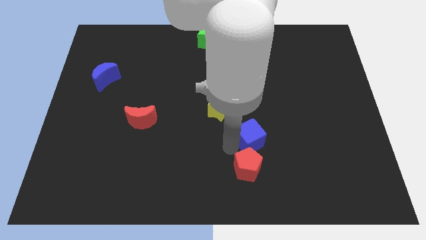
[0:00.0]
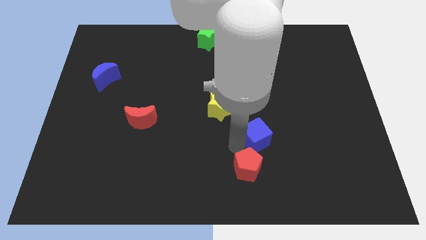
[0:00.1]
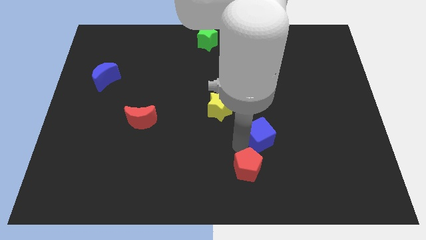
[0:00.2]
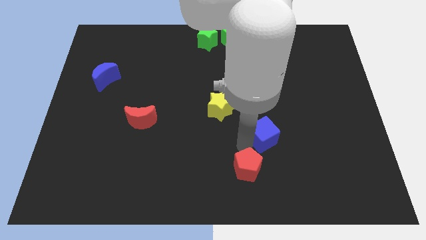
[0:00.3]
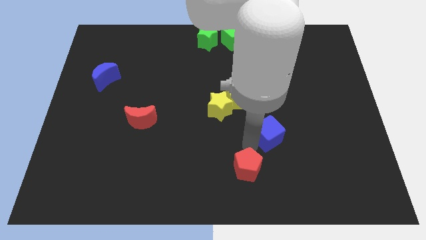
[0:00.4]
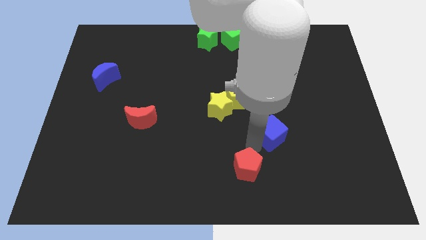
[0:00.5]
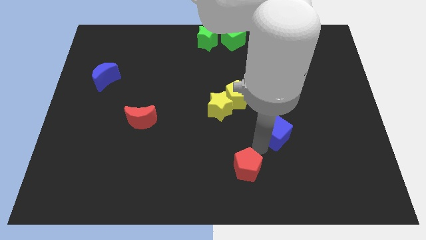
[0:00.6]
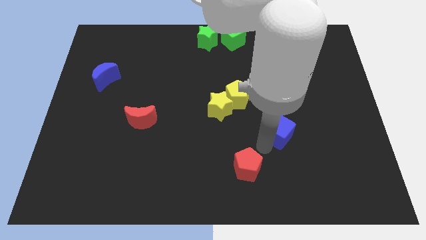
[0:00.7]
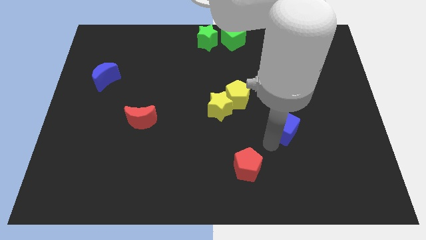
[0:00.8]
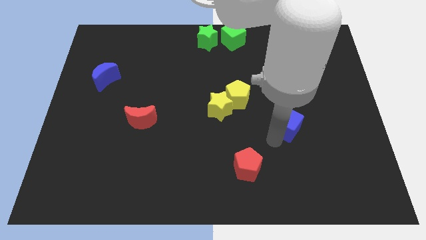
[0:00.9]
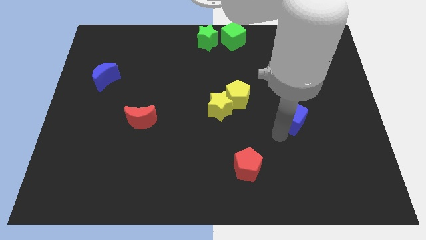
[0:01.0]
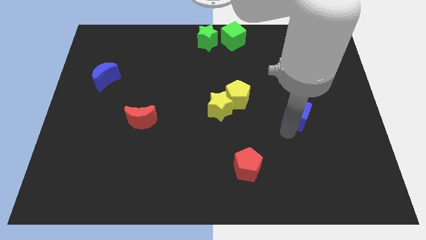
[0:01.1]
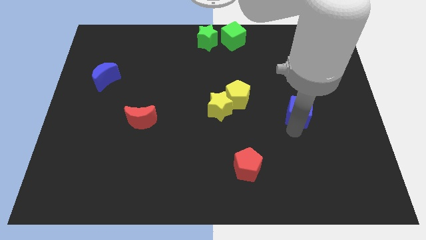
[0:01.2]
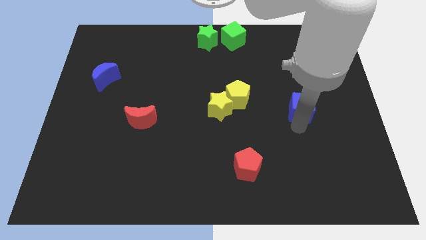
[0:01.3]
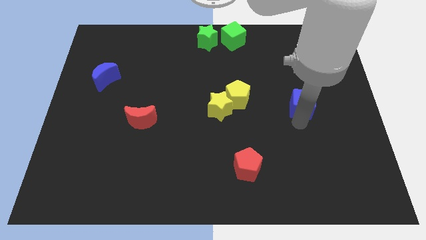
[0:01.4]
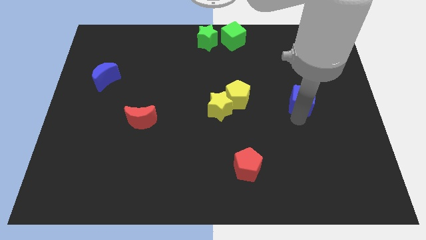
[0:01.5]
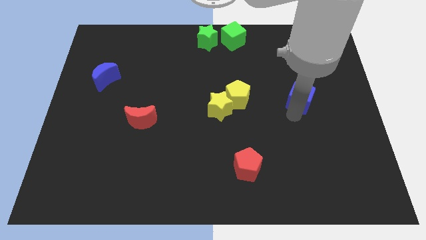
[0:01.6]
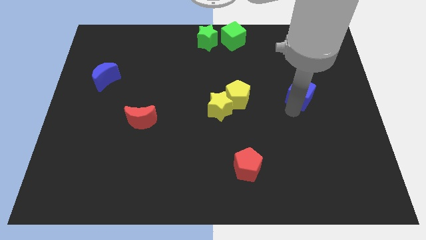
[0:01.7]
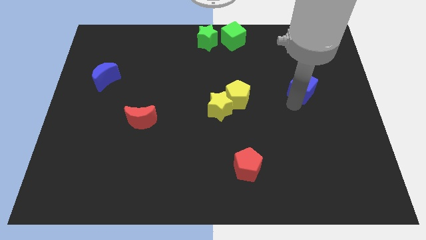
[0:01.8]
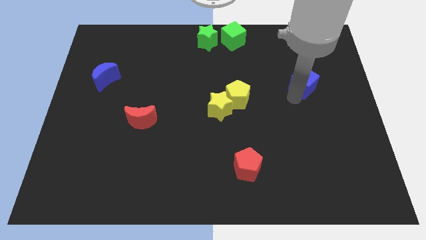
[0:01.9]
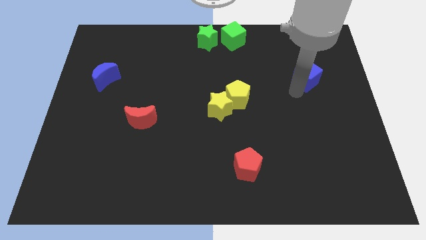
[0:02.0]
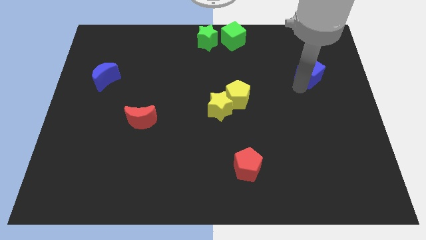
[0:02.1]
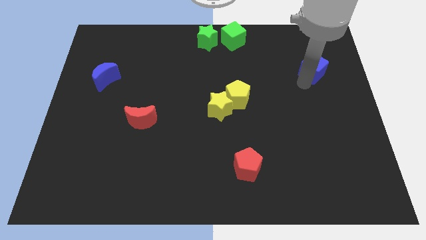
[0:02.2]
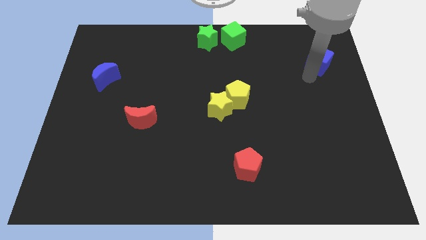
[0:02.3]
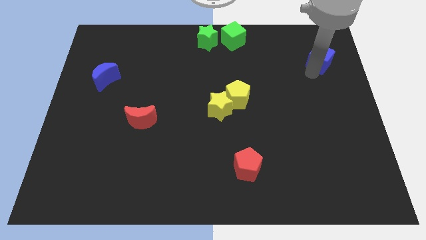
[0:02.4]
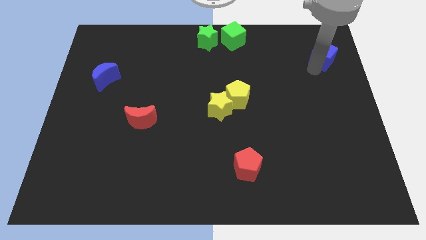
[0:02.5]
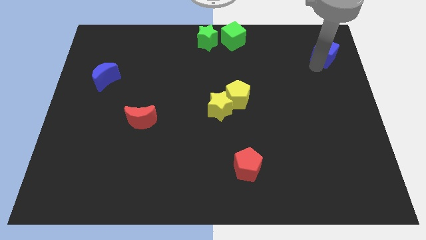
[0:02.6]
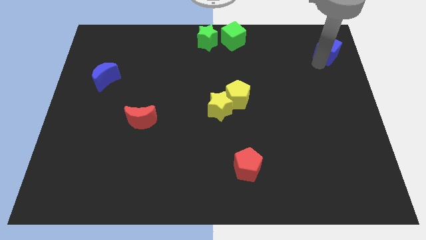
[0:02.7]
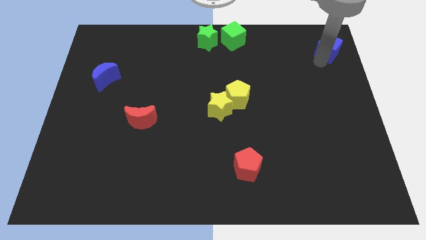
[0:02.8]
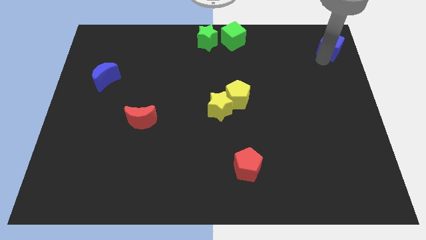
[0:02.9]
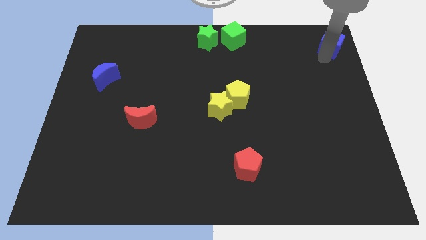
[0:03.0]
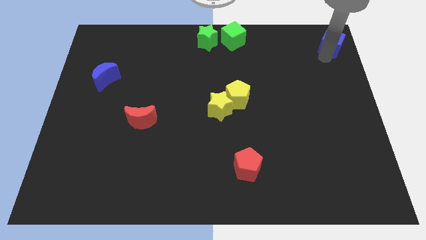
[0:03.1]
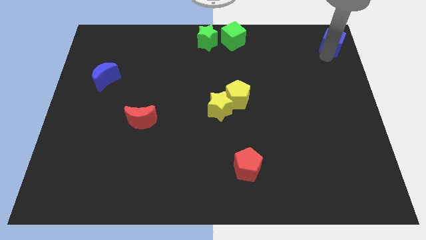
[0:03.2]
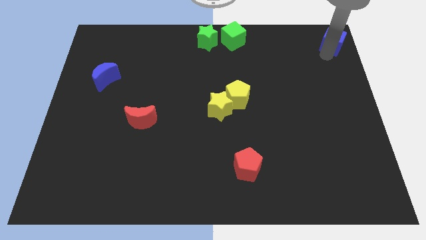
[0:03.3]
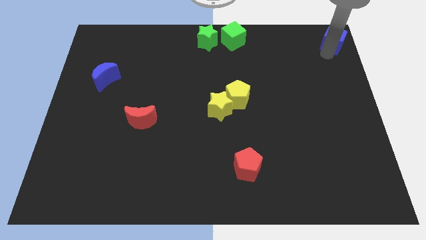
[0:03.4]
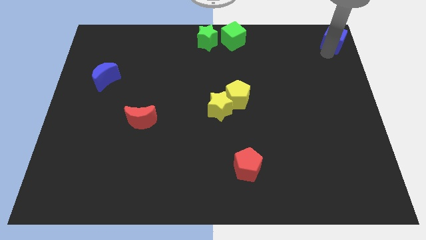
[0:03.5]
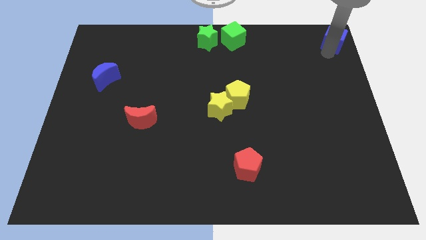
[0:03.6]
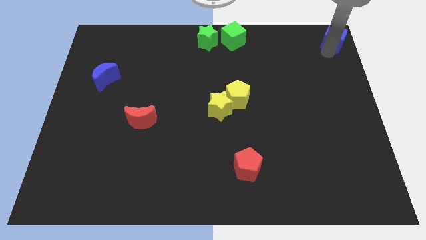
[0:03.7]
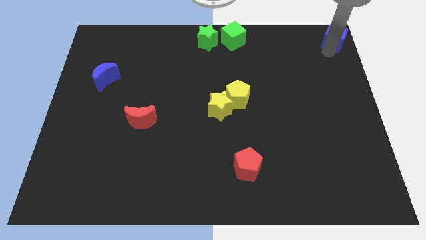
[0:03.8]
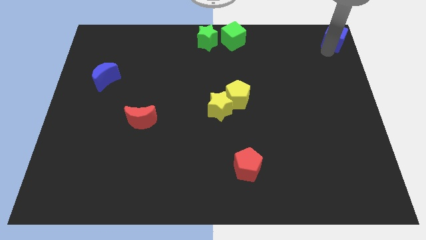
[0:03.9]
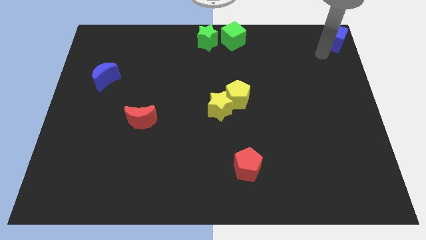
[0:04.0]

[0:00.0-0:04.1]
arrange the blue cube at the top right corner of the board

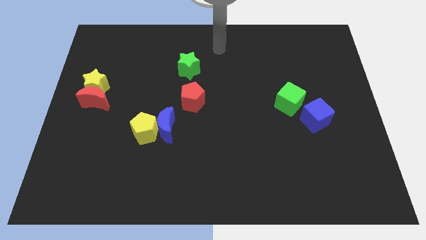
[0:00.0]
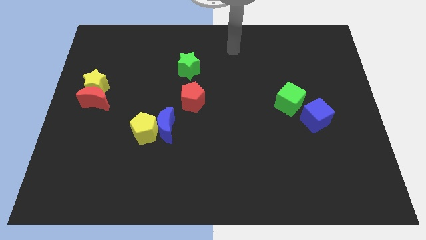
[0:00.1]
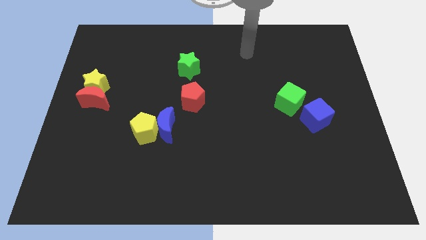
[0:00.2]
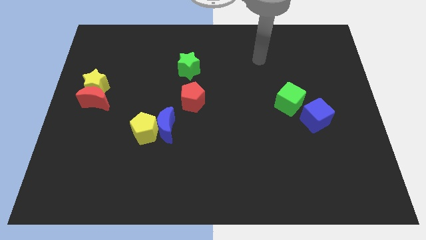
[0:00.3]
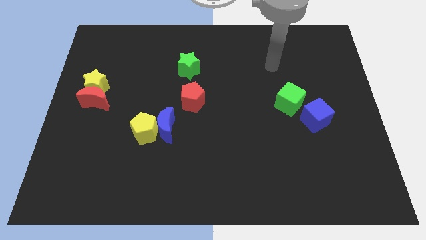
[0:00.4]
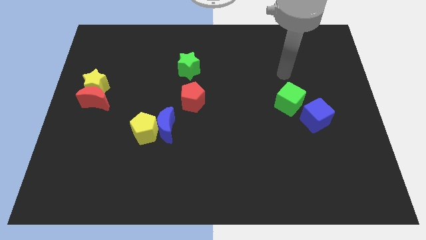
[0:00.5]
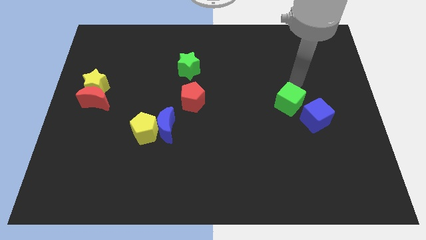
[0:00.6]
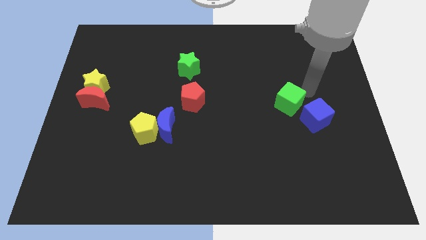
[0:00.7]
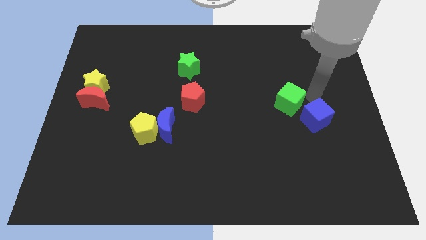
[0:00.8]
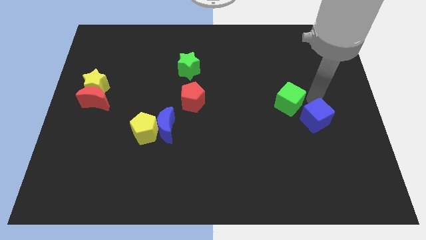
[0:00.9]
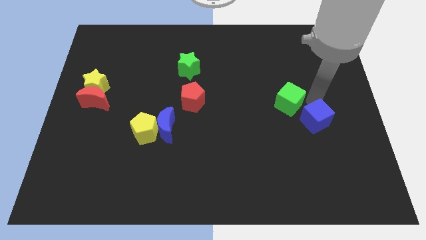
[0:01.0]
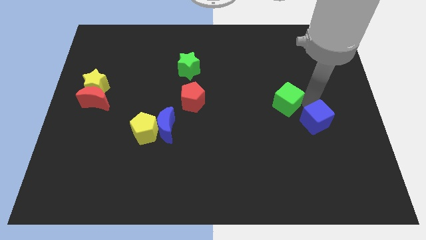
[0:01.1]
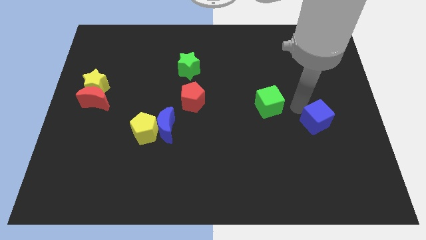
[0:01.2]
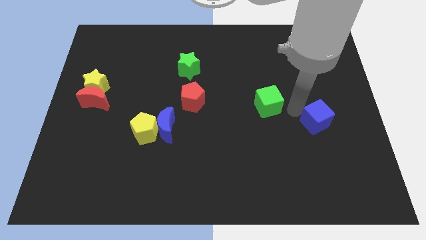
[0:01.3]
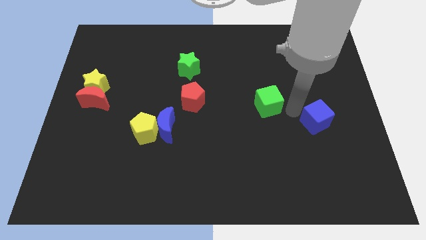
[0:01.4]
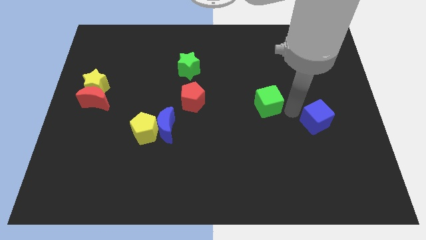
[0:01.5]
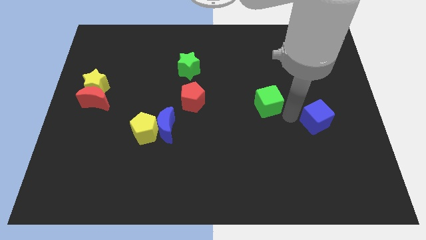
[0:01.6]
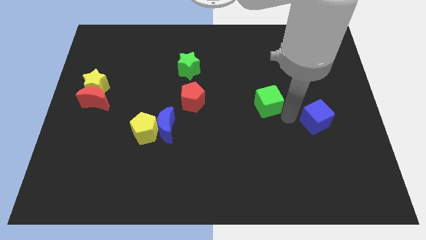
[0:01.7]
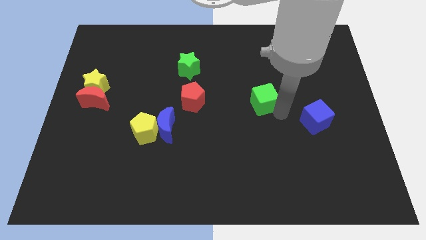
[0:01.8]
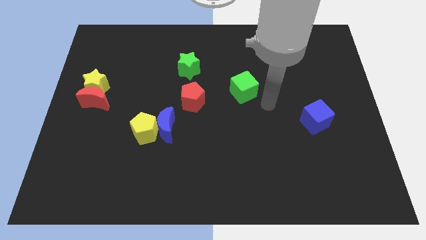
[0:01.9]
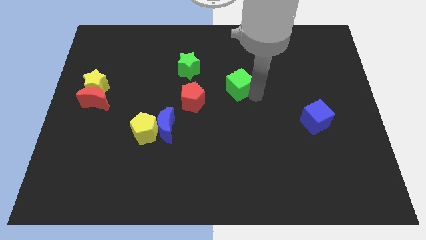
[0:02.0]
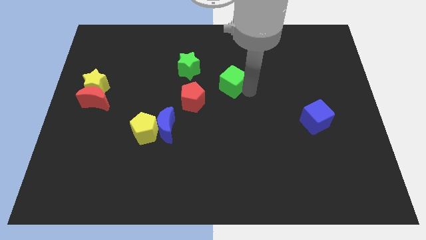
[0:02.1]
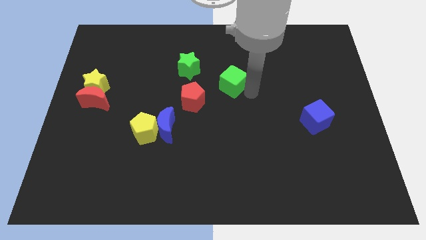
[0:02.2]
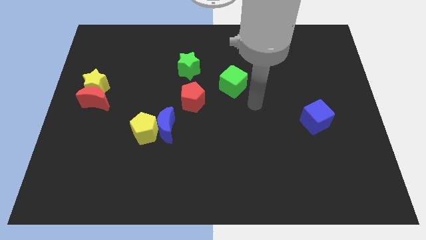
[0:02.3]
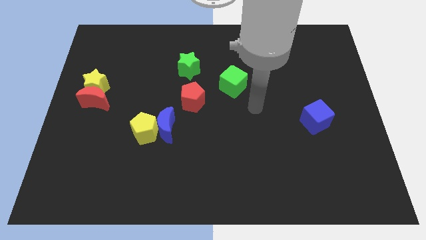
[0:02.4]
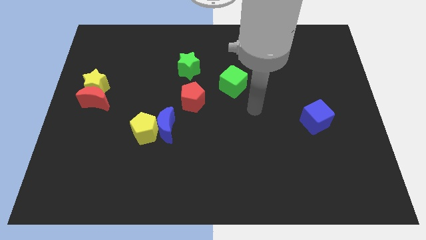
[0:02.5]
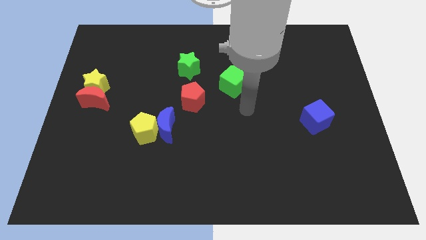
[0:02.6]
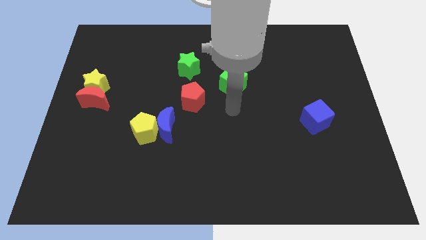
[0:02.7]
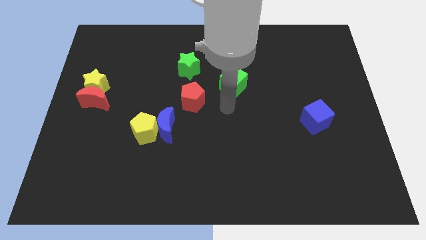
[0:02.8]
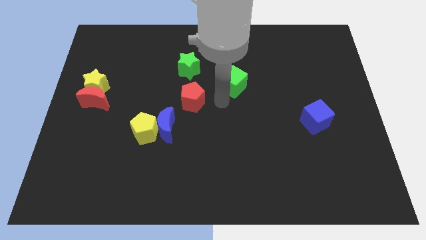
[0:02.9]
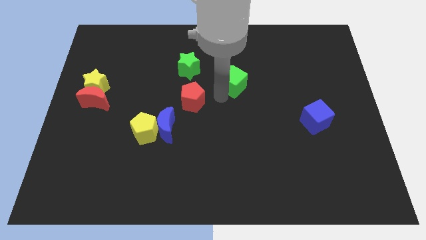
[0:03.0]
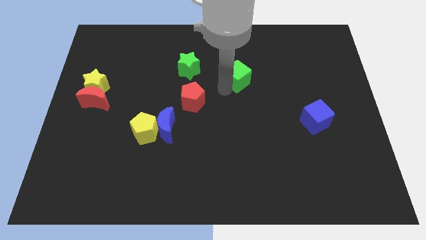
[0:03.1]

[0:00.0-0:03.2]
move the green cube to the top right of the red pentagon

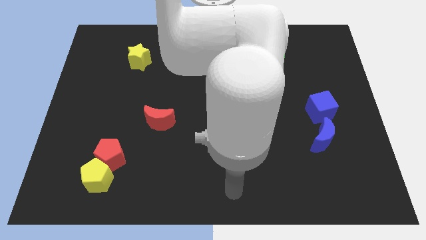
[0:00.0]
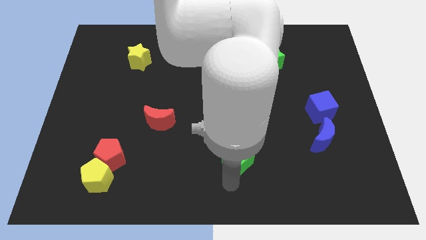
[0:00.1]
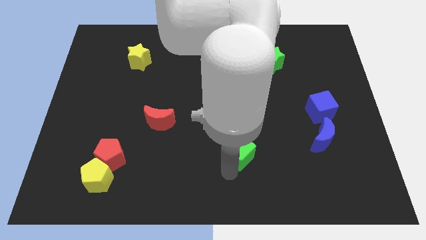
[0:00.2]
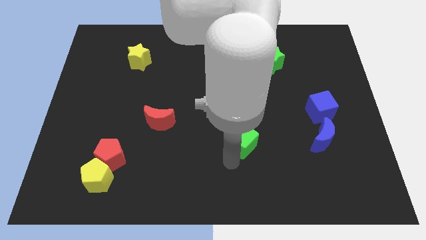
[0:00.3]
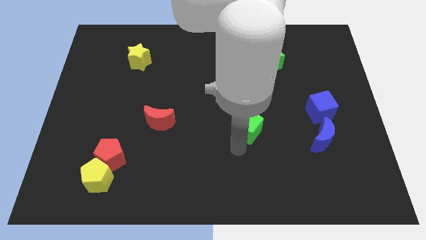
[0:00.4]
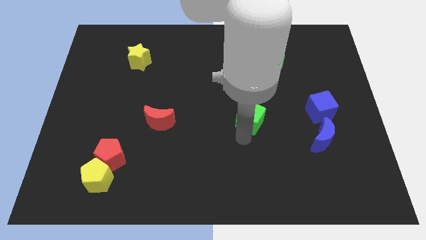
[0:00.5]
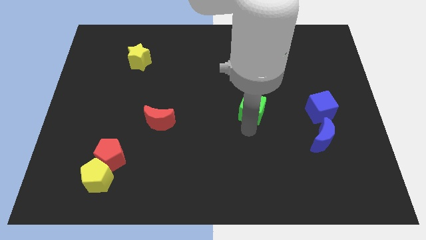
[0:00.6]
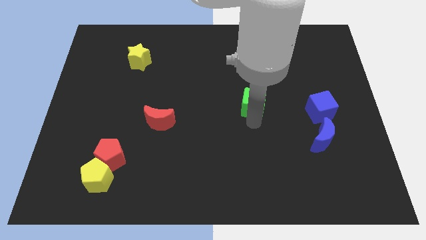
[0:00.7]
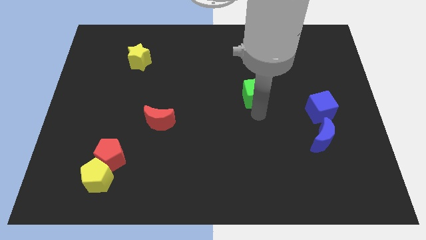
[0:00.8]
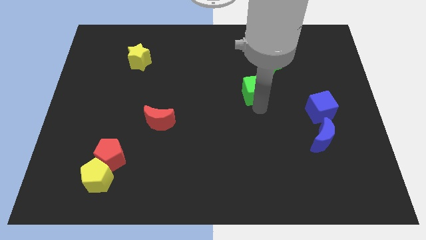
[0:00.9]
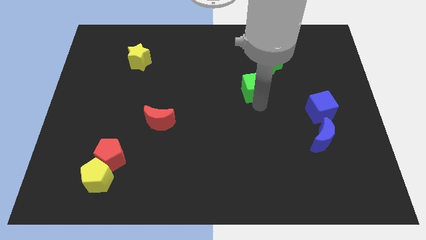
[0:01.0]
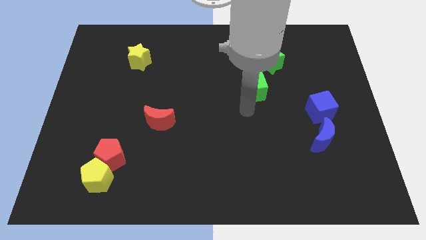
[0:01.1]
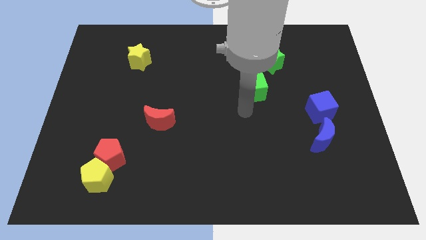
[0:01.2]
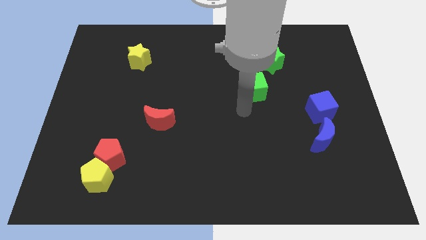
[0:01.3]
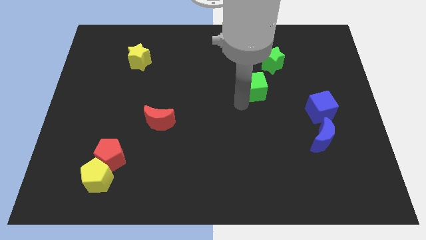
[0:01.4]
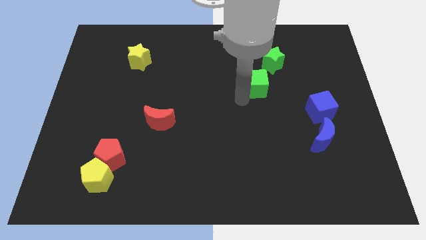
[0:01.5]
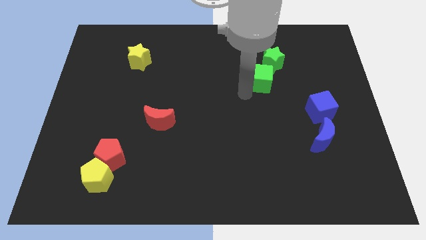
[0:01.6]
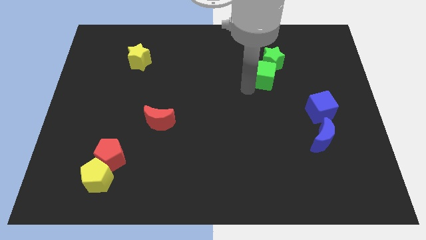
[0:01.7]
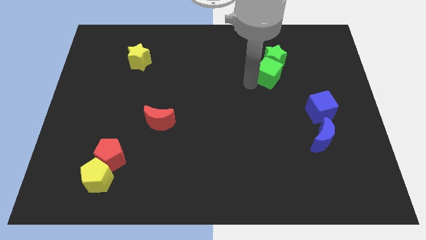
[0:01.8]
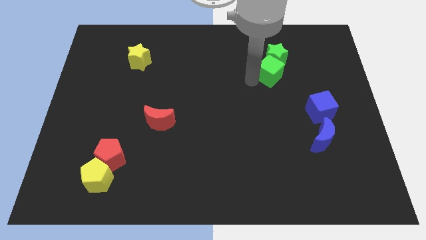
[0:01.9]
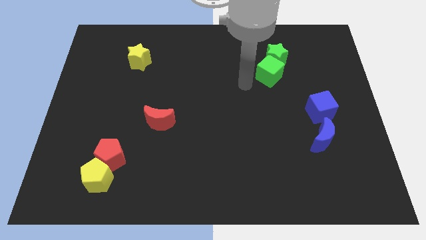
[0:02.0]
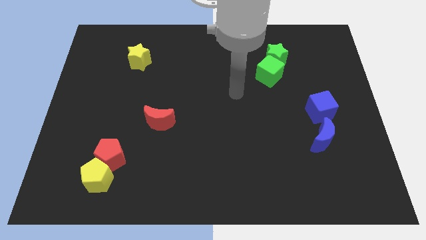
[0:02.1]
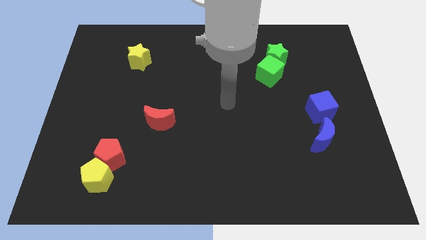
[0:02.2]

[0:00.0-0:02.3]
push the green cube into green star
